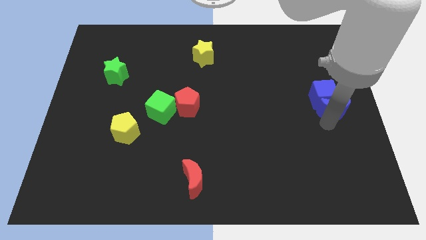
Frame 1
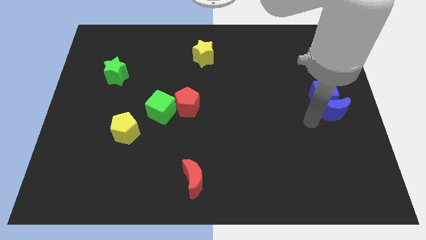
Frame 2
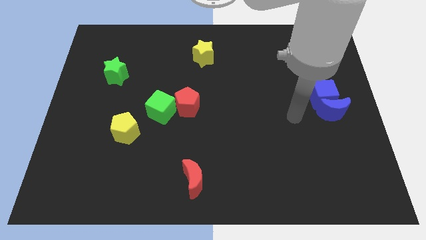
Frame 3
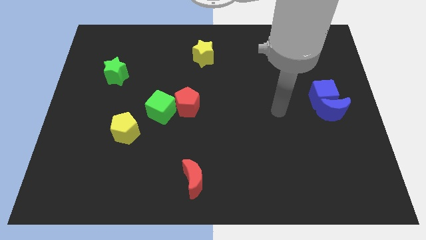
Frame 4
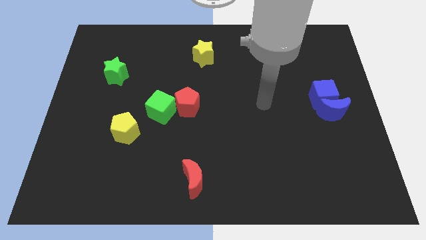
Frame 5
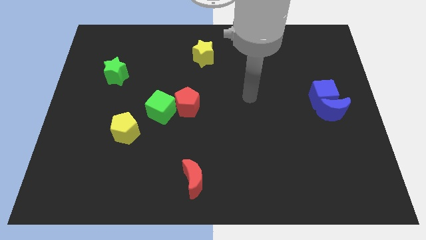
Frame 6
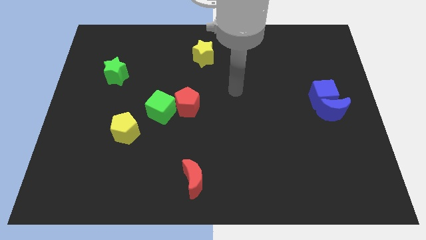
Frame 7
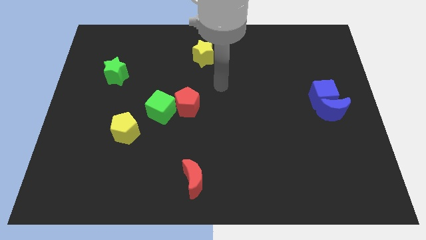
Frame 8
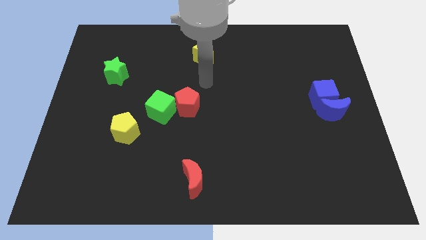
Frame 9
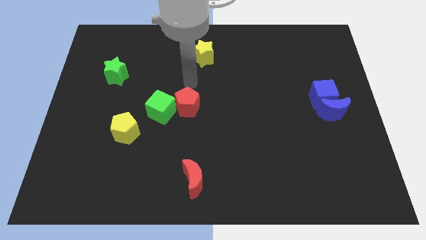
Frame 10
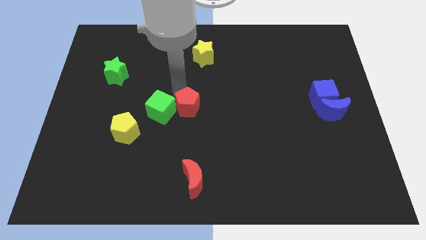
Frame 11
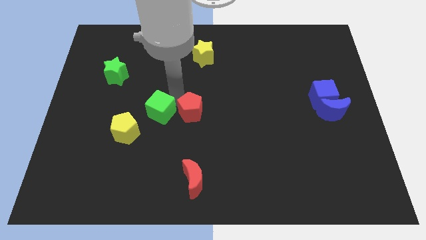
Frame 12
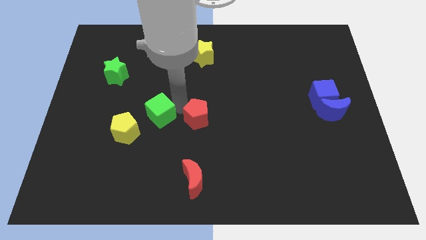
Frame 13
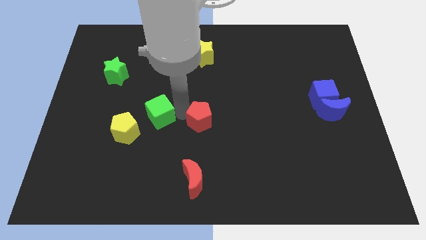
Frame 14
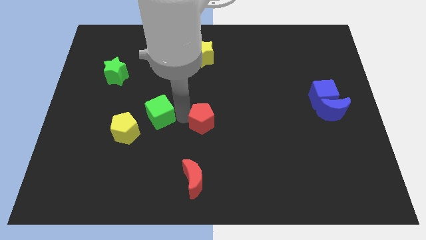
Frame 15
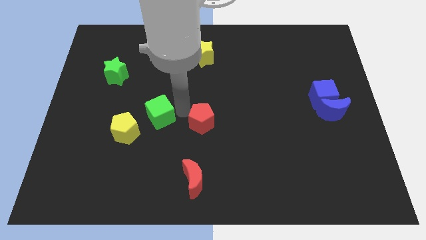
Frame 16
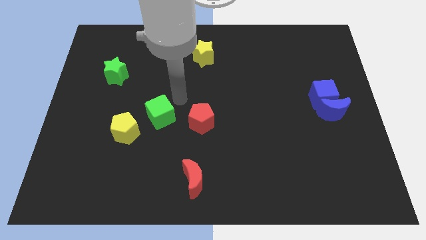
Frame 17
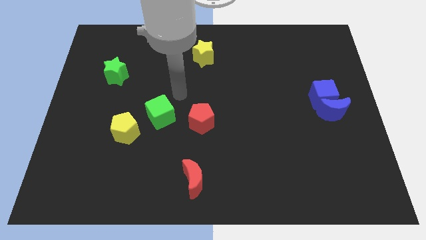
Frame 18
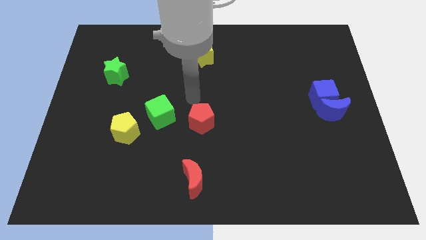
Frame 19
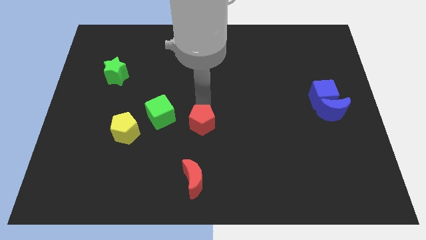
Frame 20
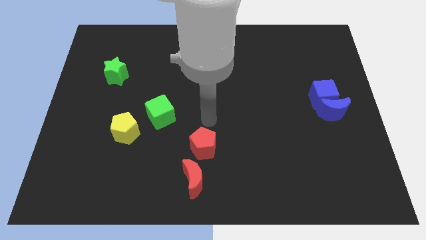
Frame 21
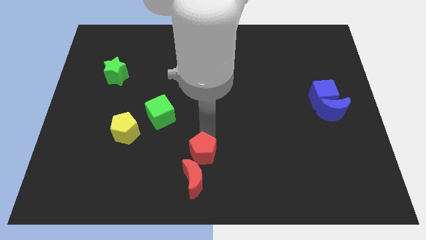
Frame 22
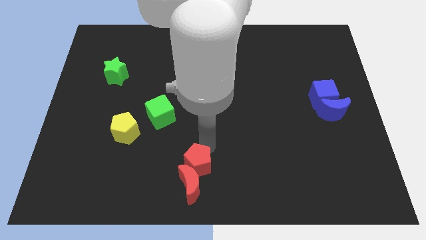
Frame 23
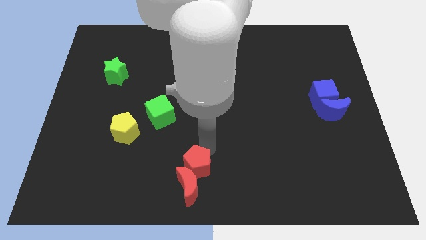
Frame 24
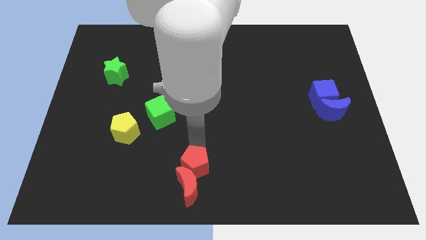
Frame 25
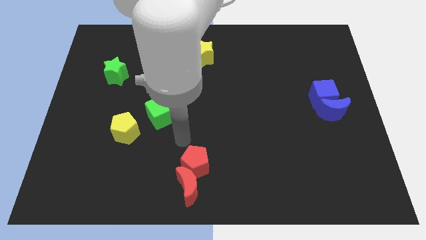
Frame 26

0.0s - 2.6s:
drag the red pentagon into the top side of the red moon

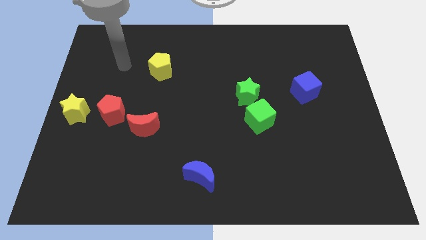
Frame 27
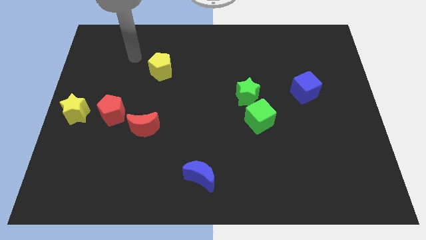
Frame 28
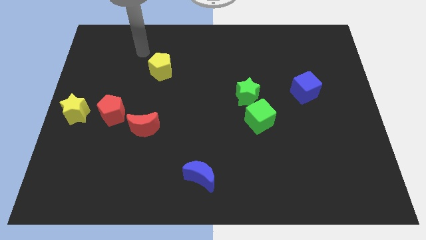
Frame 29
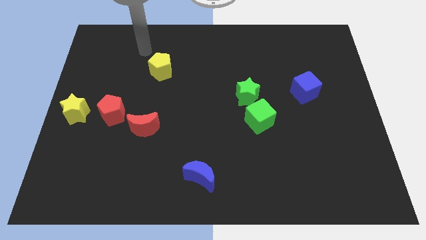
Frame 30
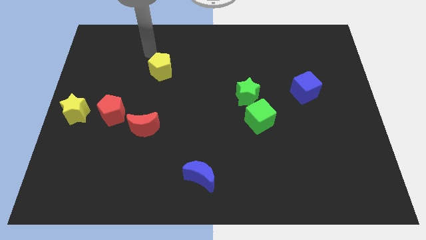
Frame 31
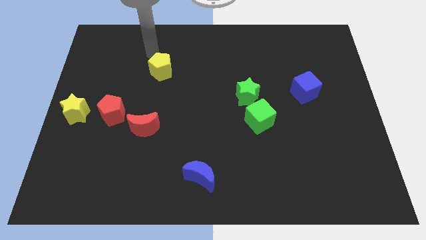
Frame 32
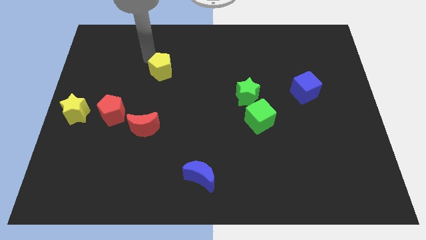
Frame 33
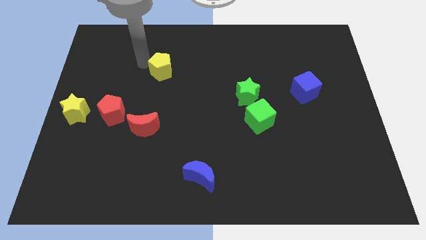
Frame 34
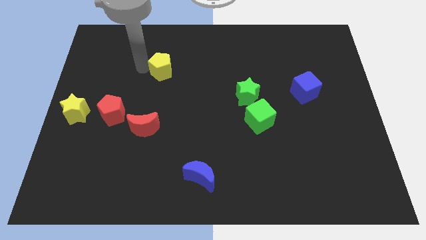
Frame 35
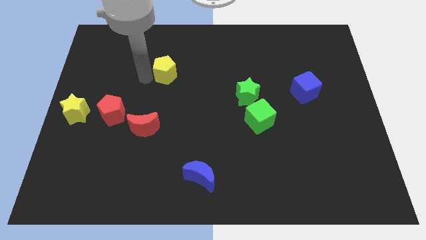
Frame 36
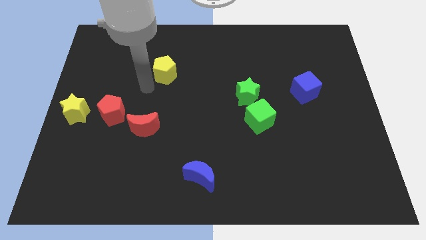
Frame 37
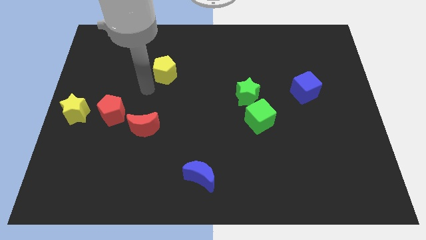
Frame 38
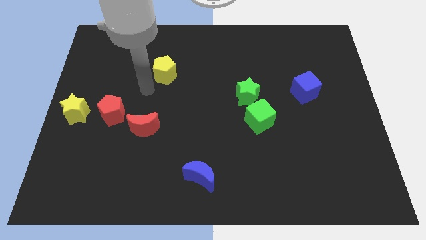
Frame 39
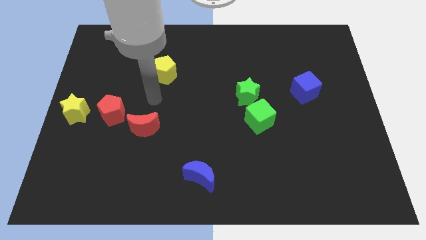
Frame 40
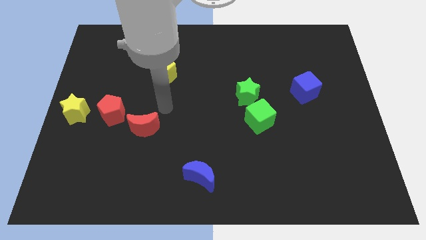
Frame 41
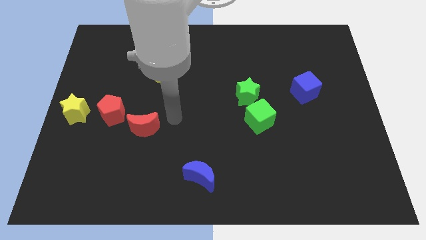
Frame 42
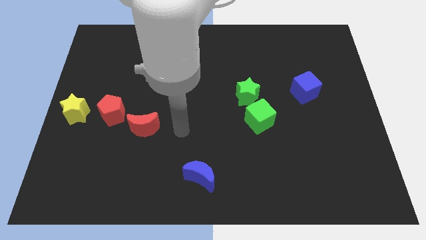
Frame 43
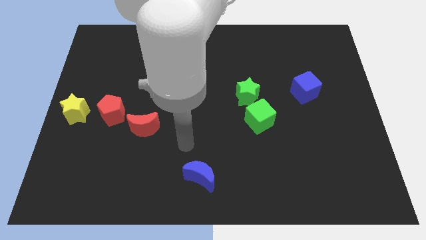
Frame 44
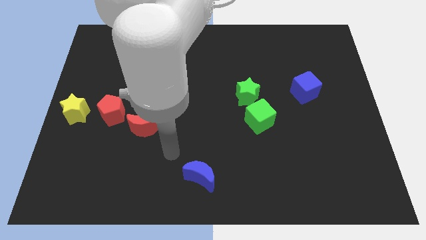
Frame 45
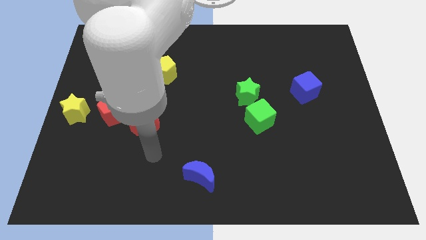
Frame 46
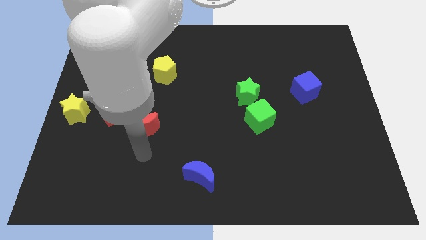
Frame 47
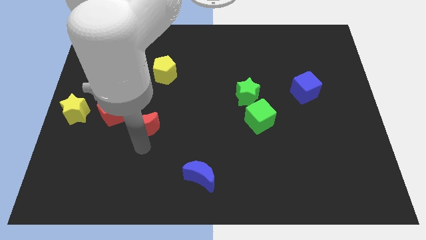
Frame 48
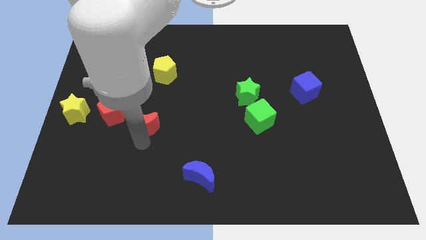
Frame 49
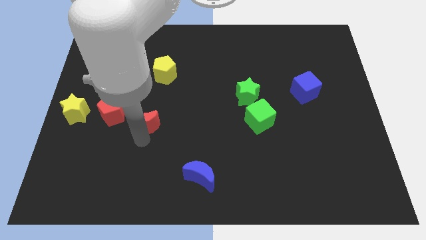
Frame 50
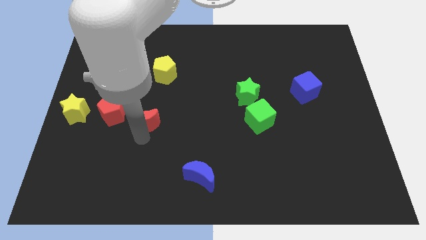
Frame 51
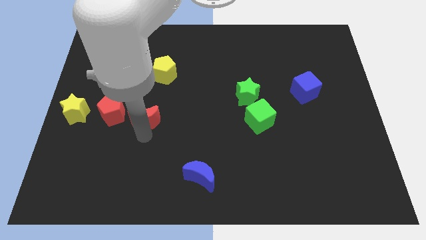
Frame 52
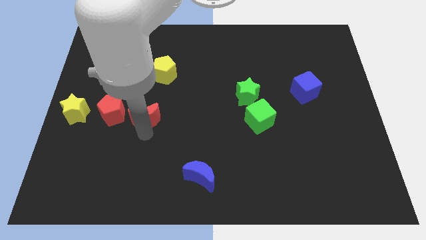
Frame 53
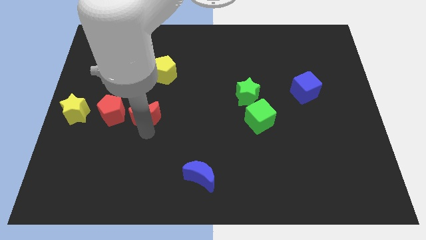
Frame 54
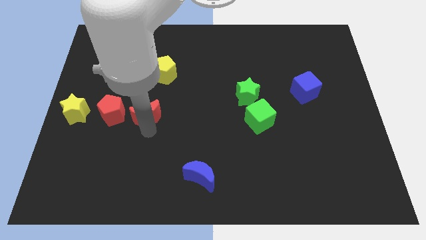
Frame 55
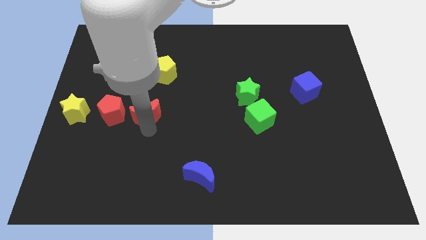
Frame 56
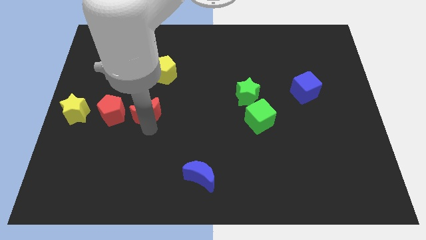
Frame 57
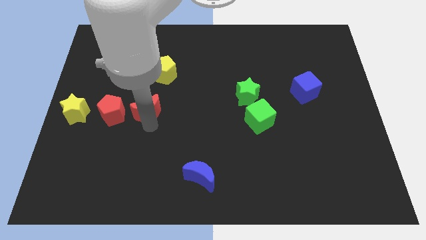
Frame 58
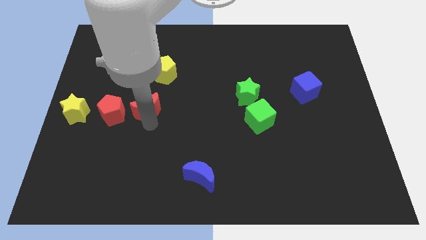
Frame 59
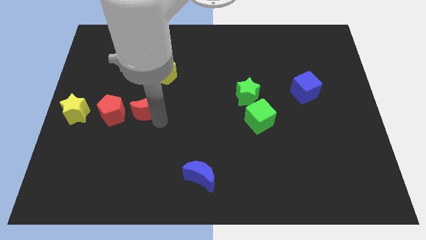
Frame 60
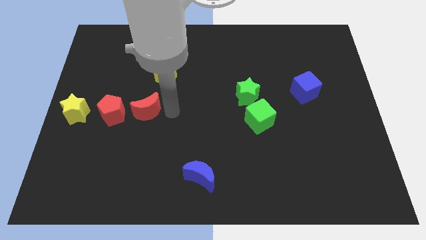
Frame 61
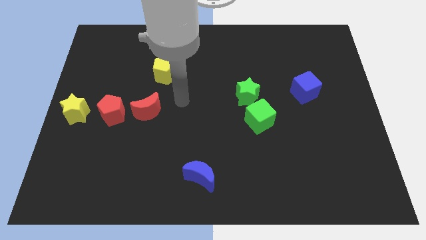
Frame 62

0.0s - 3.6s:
adjust the red moon at the right side of the red pentagon

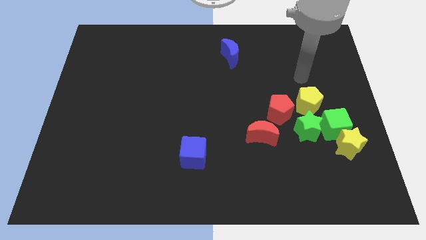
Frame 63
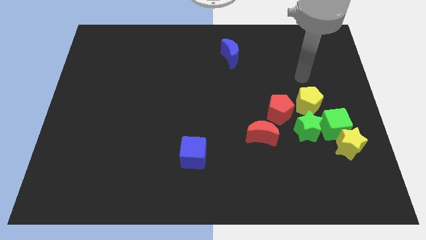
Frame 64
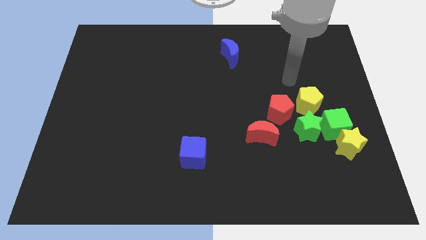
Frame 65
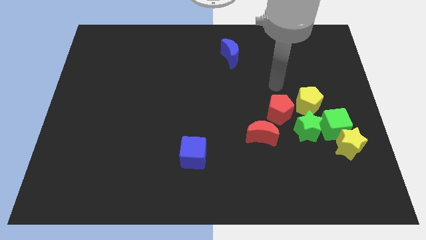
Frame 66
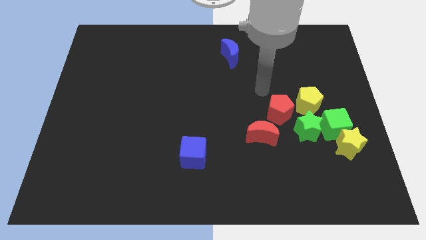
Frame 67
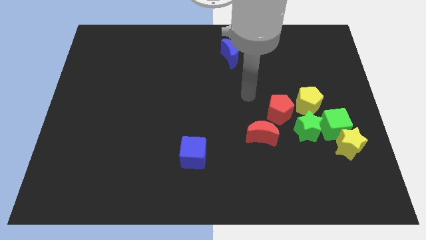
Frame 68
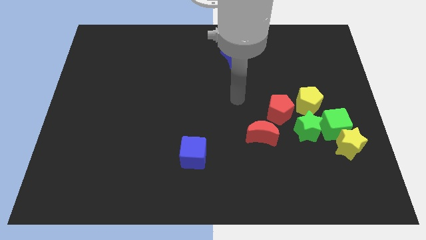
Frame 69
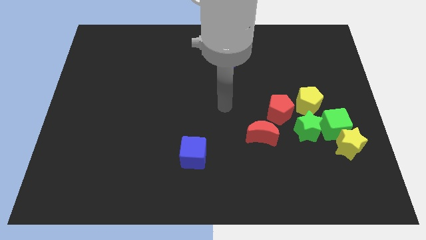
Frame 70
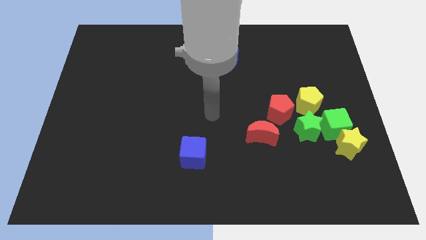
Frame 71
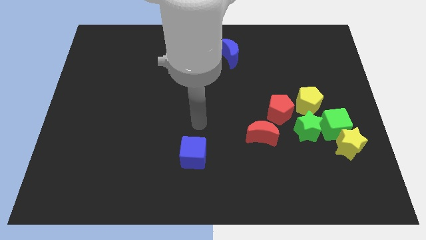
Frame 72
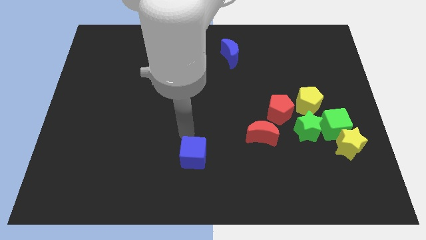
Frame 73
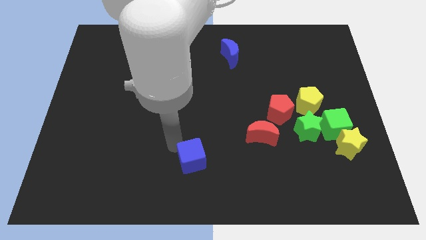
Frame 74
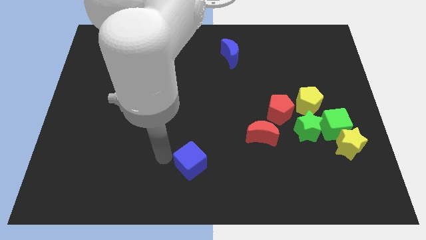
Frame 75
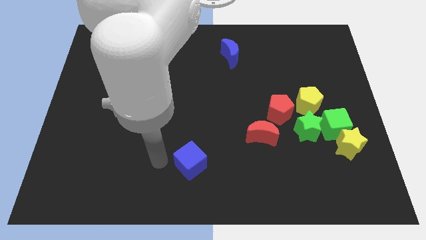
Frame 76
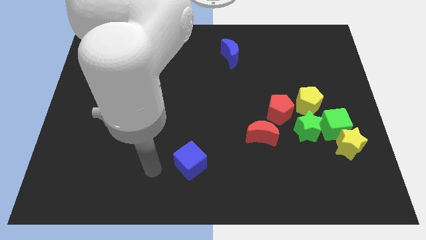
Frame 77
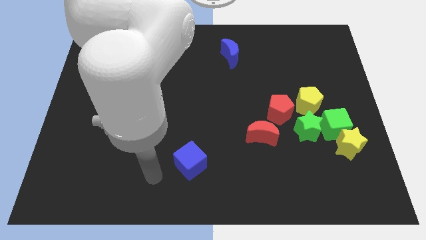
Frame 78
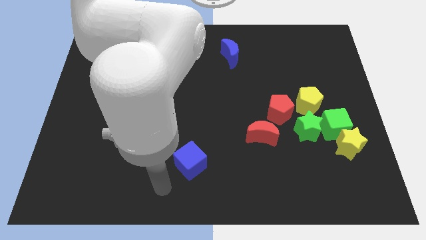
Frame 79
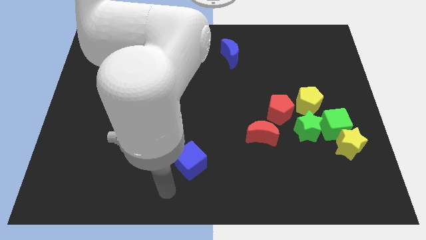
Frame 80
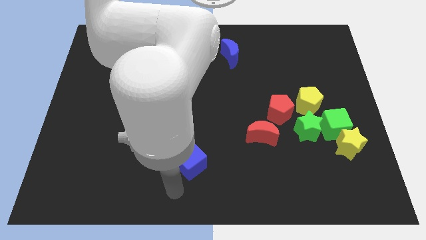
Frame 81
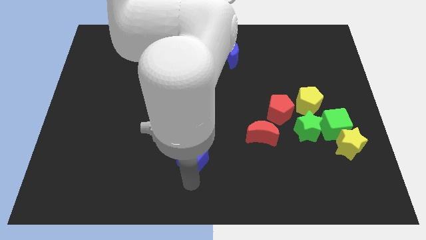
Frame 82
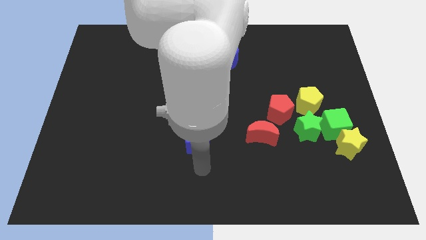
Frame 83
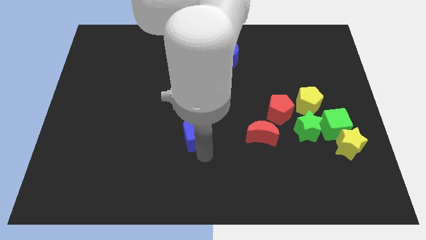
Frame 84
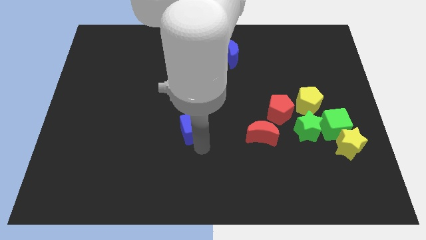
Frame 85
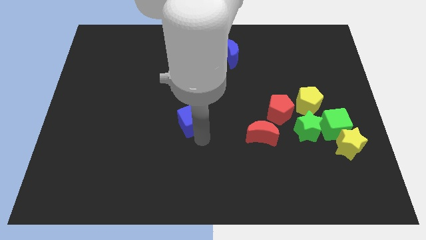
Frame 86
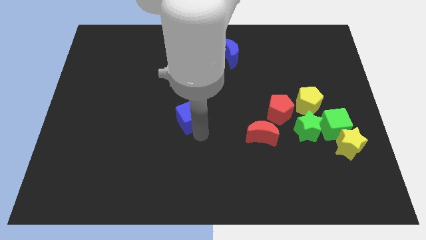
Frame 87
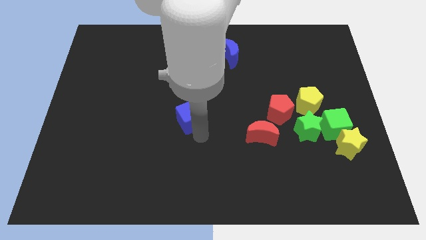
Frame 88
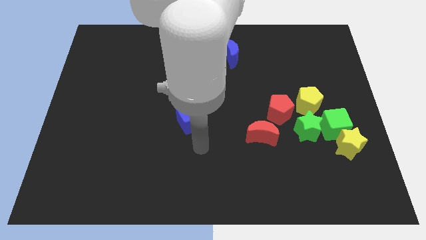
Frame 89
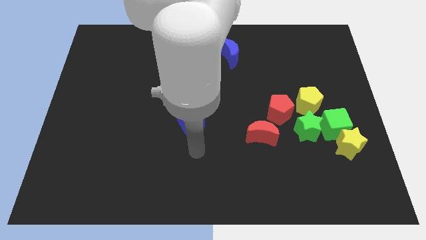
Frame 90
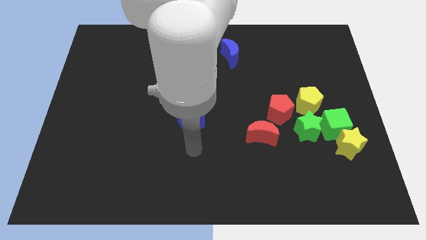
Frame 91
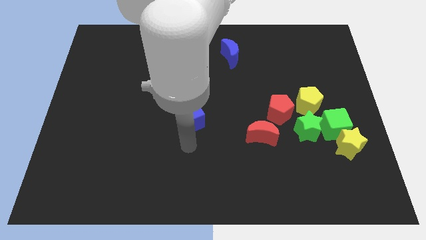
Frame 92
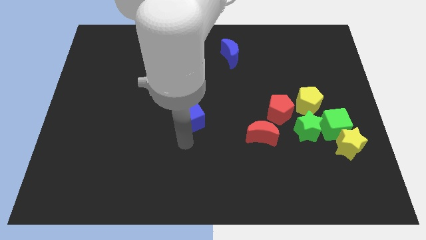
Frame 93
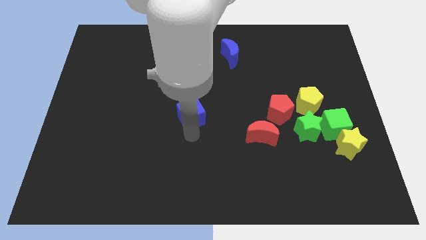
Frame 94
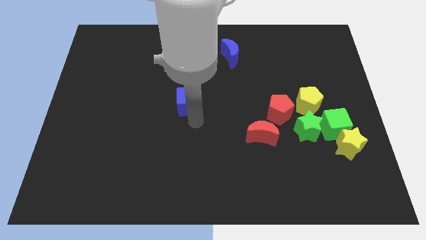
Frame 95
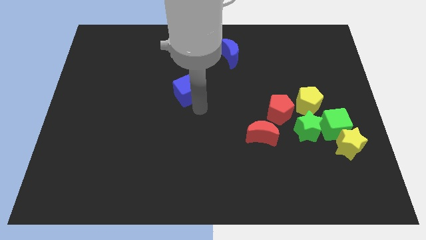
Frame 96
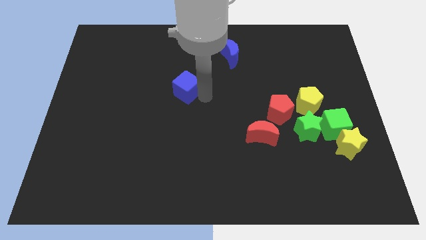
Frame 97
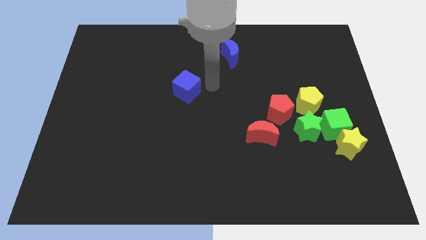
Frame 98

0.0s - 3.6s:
place the blue cube at the bottom left of the blue moon
